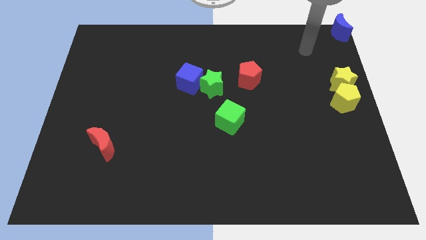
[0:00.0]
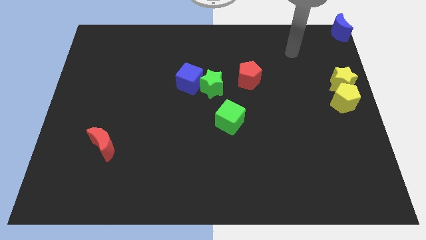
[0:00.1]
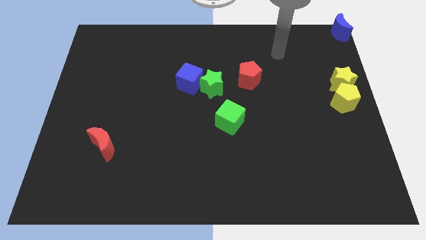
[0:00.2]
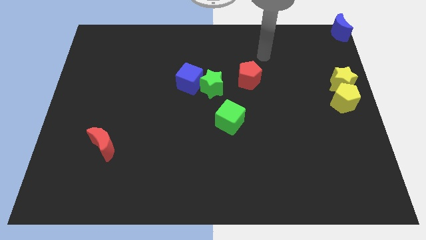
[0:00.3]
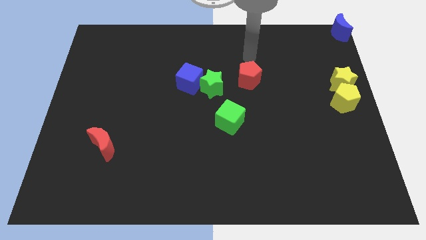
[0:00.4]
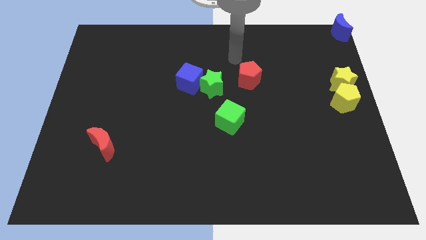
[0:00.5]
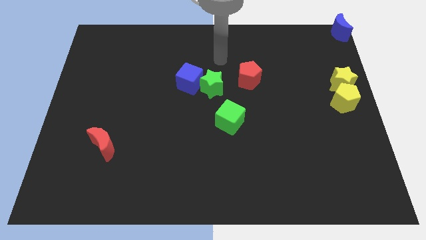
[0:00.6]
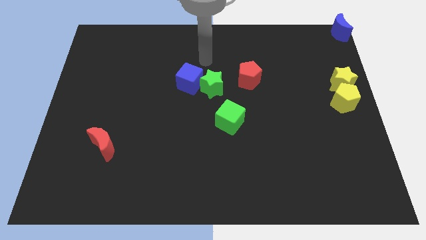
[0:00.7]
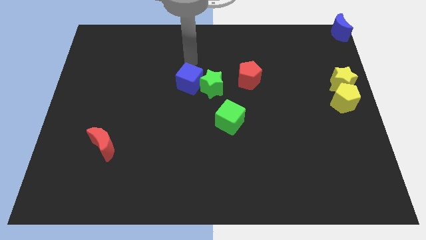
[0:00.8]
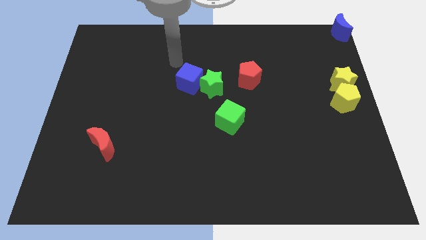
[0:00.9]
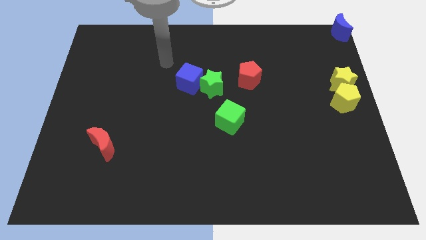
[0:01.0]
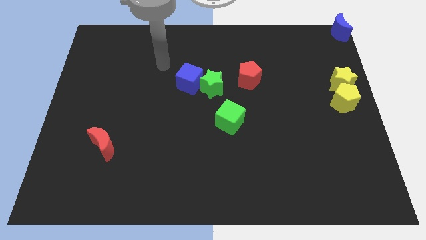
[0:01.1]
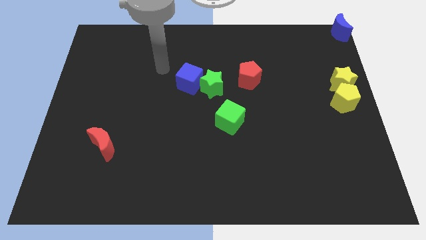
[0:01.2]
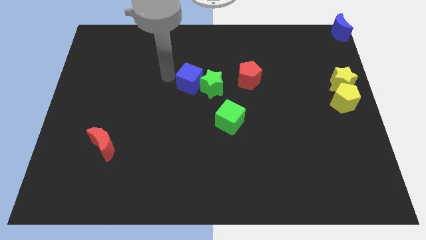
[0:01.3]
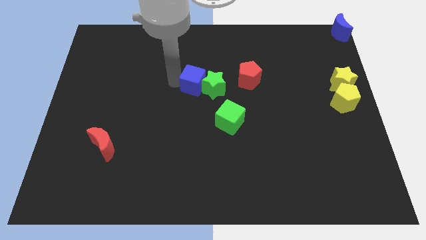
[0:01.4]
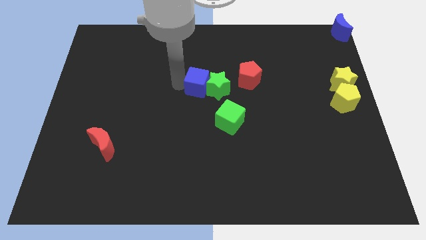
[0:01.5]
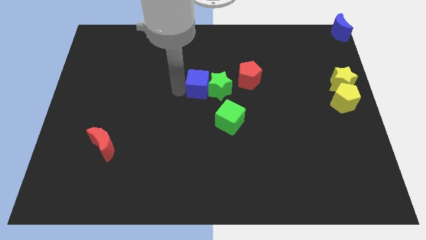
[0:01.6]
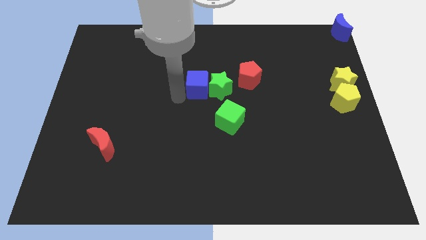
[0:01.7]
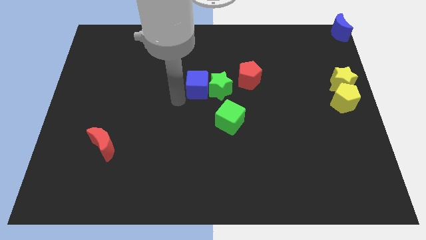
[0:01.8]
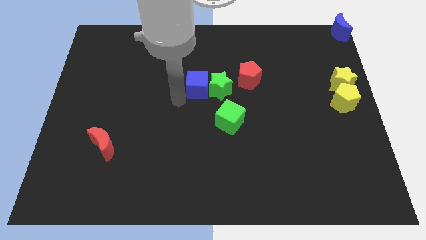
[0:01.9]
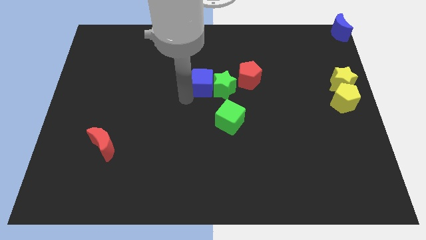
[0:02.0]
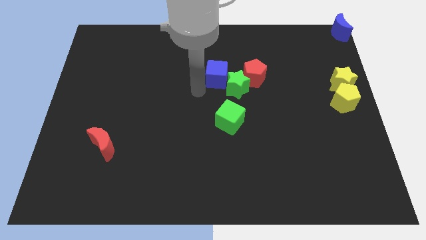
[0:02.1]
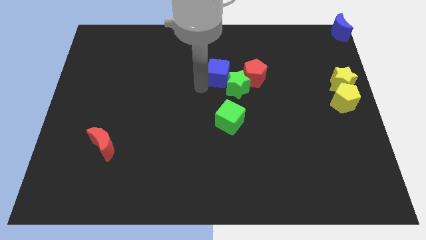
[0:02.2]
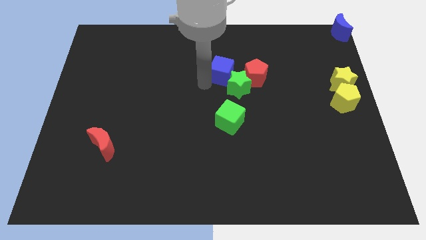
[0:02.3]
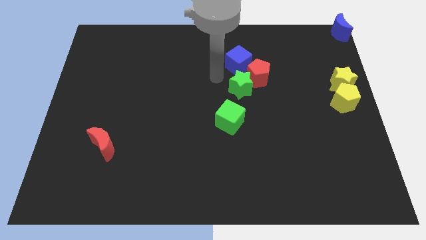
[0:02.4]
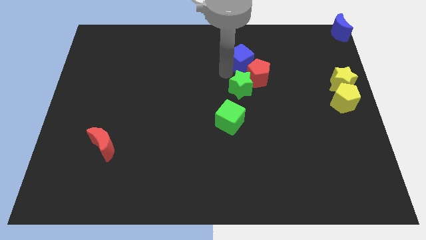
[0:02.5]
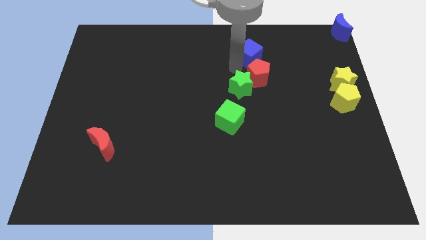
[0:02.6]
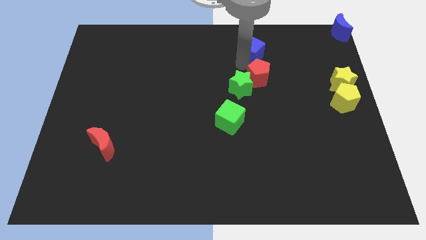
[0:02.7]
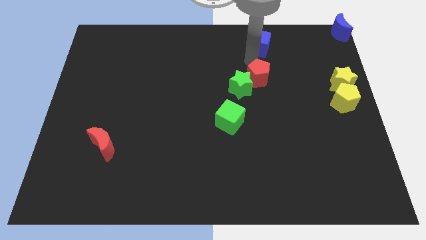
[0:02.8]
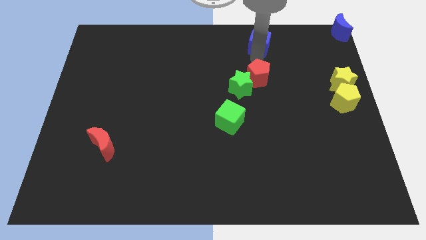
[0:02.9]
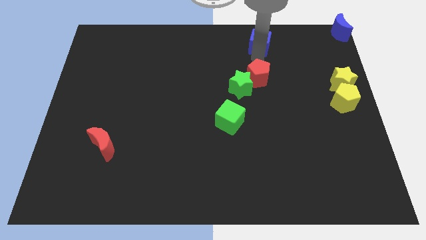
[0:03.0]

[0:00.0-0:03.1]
separate the blue cube from the green star

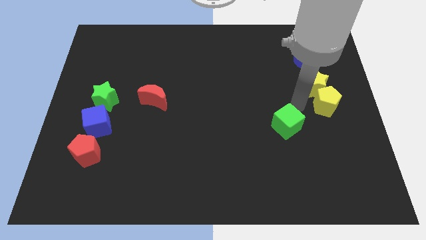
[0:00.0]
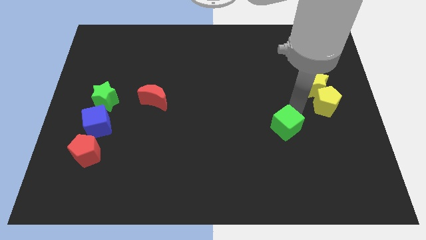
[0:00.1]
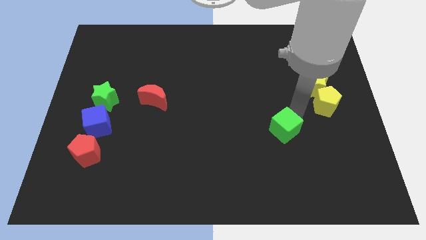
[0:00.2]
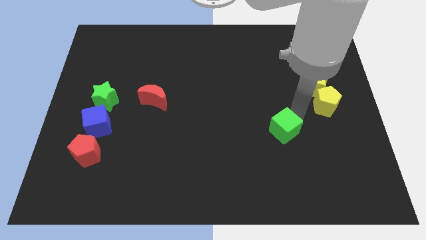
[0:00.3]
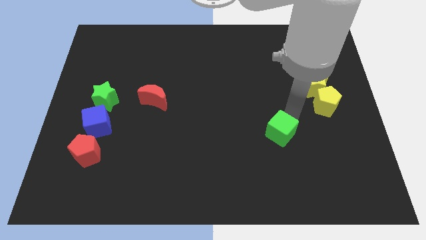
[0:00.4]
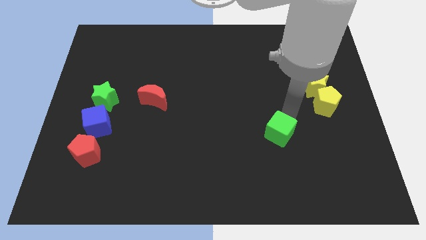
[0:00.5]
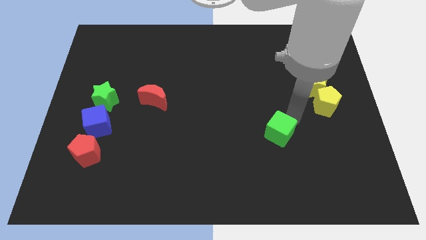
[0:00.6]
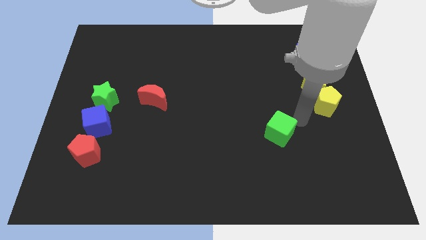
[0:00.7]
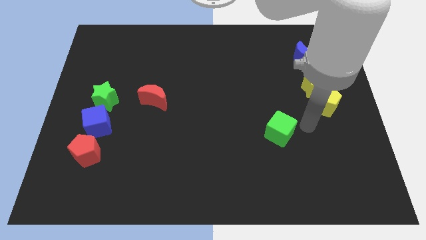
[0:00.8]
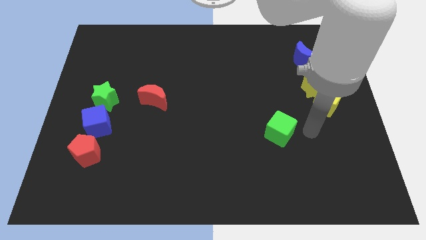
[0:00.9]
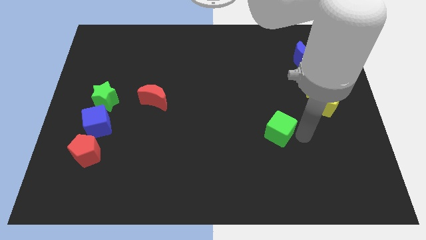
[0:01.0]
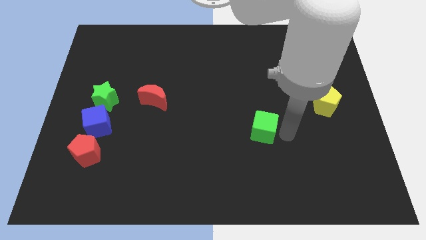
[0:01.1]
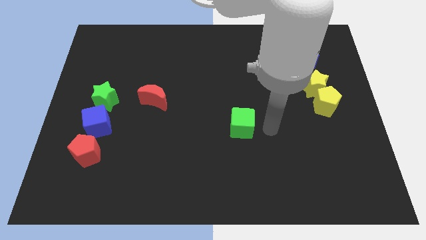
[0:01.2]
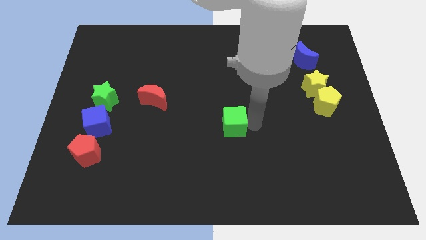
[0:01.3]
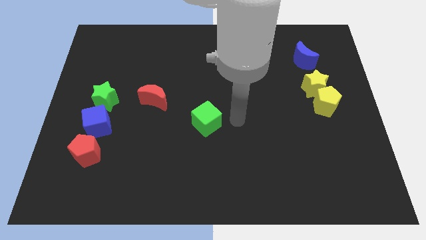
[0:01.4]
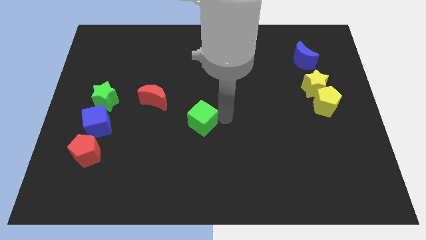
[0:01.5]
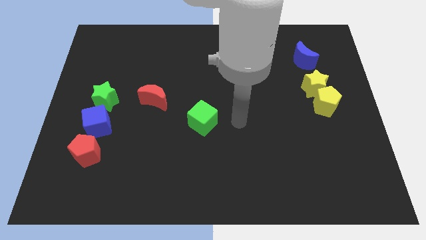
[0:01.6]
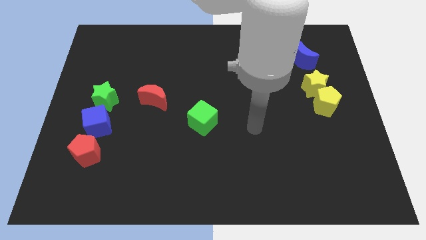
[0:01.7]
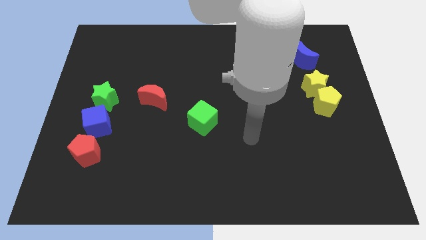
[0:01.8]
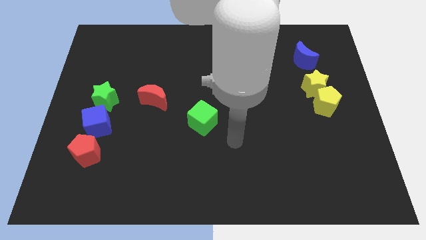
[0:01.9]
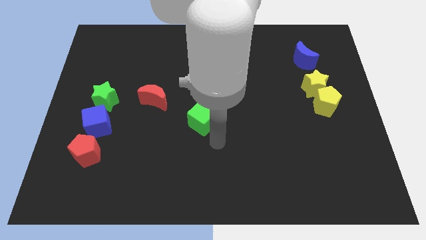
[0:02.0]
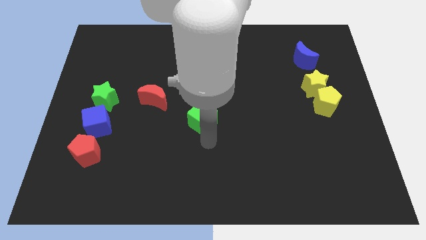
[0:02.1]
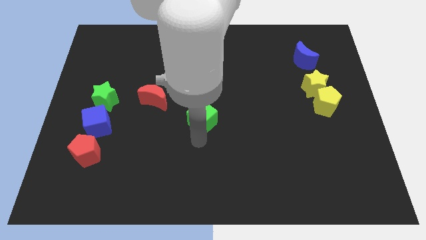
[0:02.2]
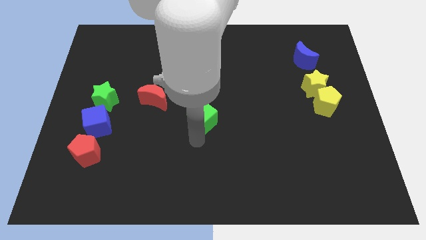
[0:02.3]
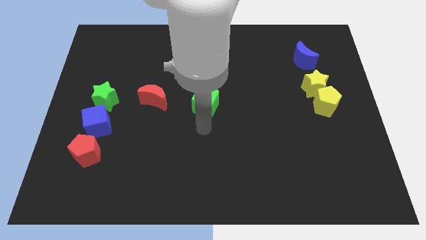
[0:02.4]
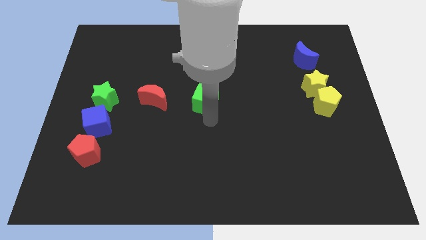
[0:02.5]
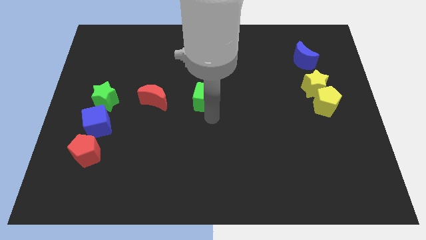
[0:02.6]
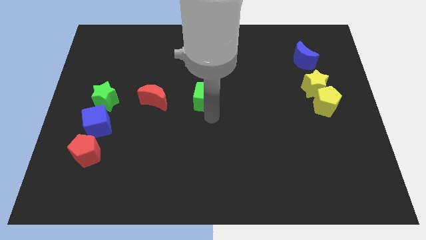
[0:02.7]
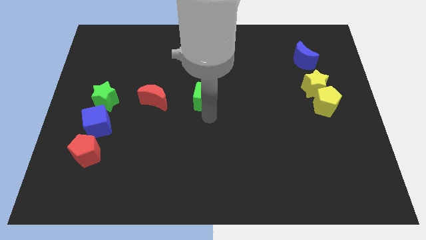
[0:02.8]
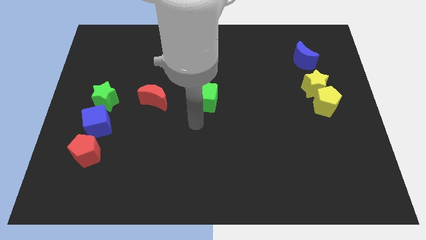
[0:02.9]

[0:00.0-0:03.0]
push the green cube to the right of red moon

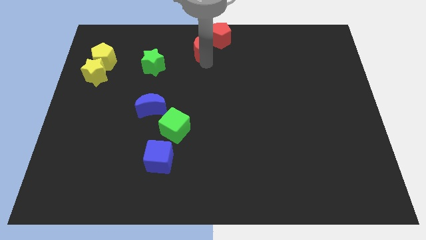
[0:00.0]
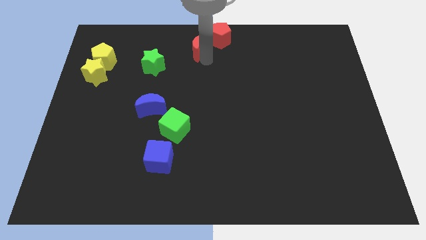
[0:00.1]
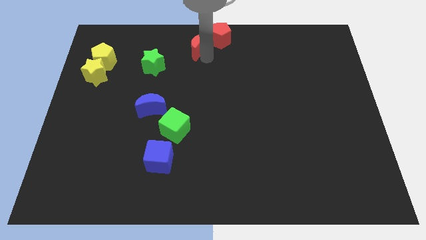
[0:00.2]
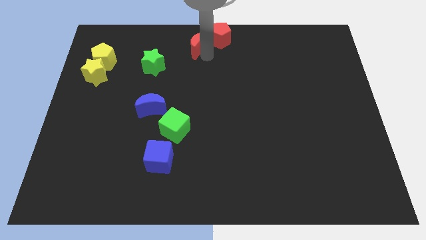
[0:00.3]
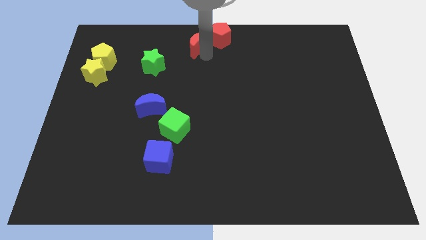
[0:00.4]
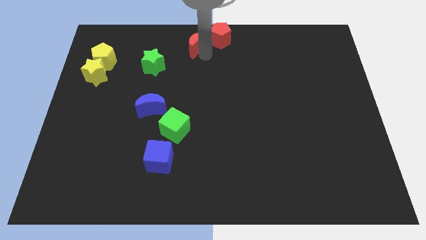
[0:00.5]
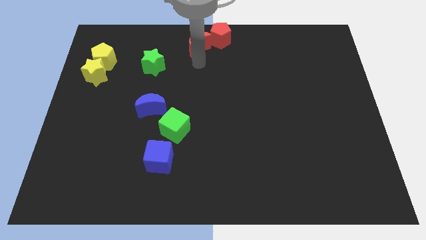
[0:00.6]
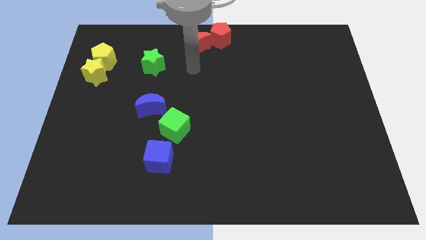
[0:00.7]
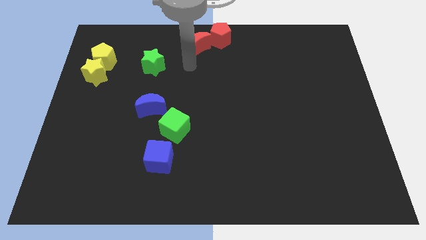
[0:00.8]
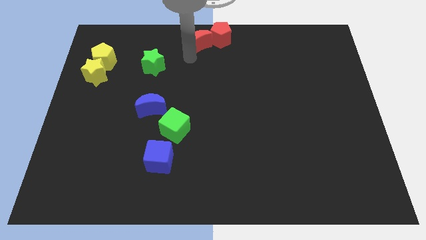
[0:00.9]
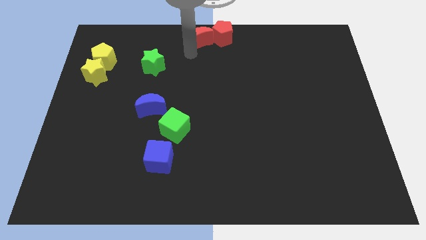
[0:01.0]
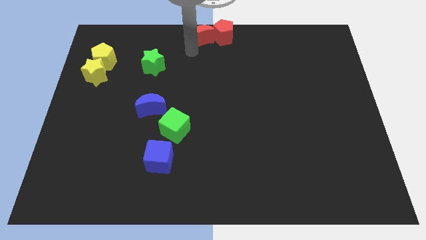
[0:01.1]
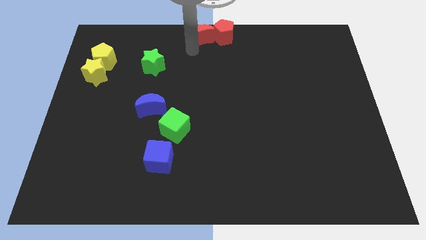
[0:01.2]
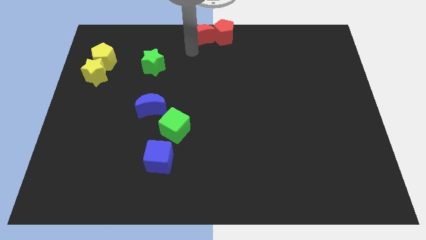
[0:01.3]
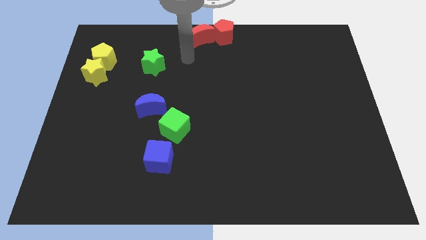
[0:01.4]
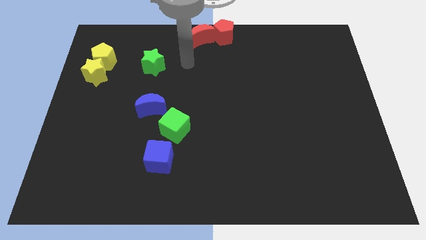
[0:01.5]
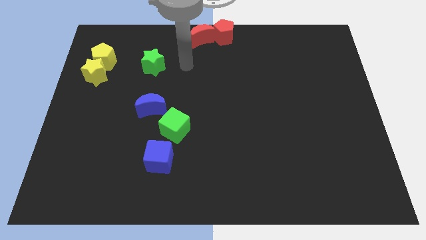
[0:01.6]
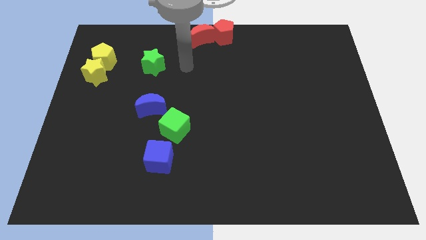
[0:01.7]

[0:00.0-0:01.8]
push the red crescent to the left of the red pentagon

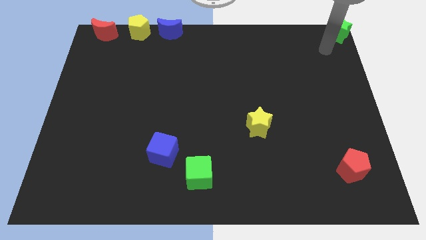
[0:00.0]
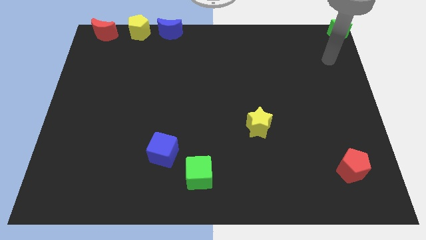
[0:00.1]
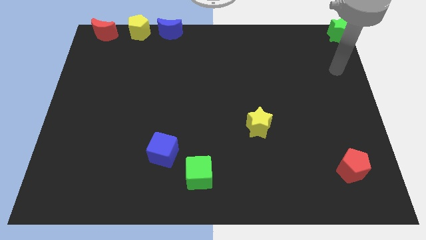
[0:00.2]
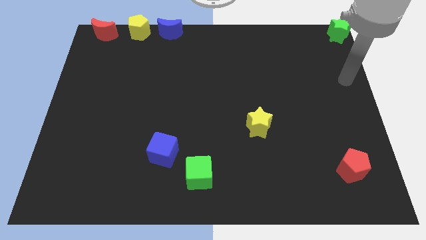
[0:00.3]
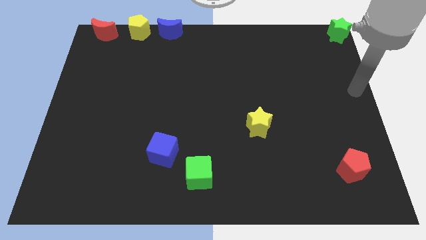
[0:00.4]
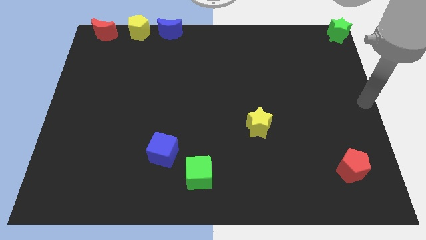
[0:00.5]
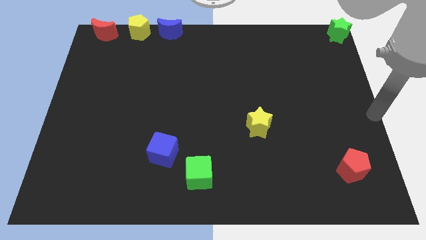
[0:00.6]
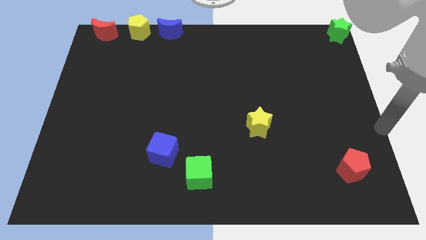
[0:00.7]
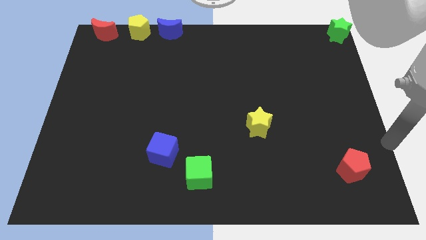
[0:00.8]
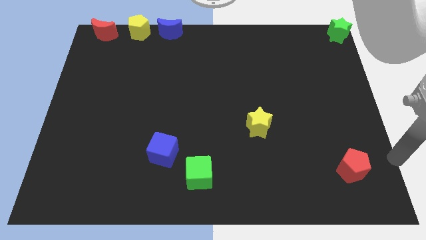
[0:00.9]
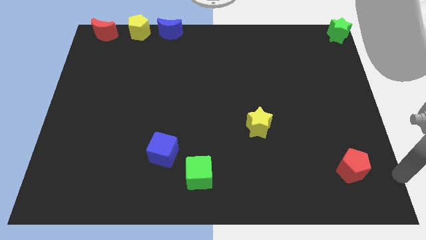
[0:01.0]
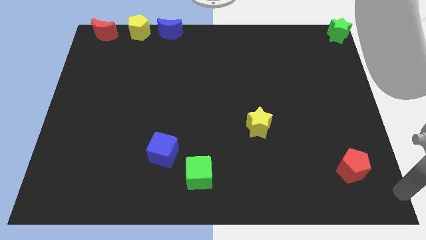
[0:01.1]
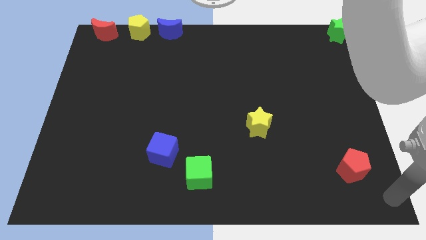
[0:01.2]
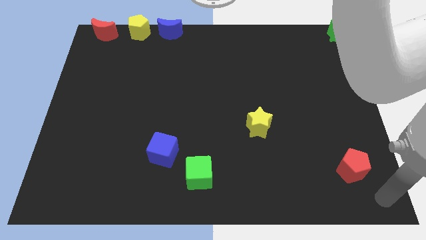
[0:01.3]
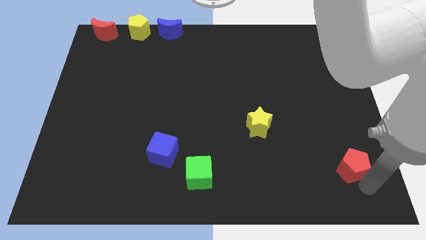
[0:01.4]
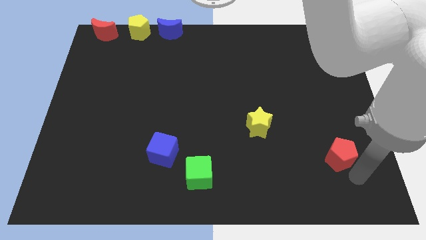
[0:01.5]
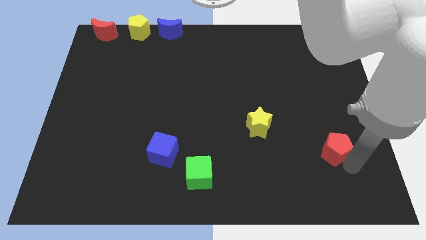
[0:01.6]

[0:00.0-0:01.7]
move the red pentagon towards yellow star
